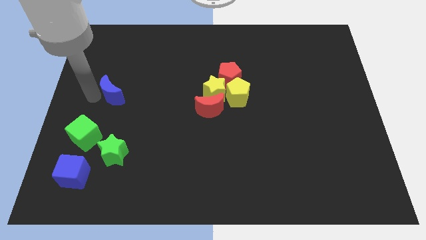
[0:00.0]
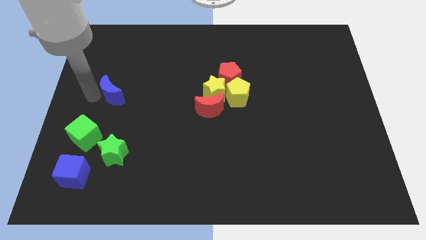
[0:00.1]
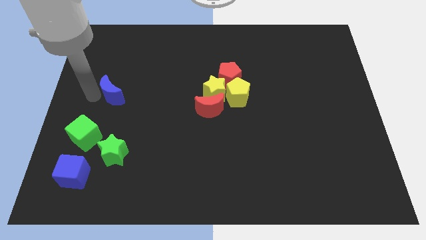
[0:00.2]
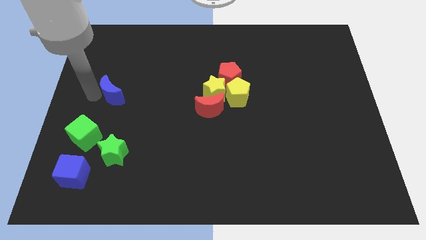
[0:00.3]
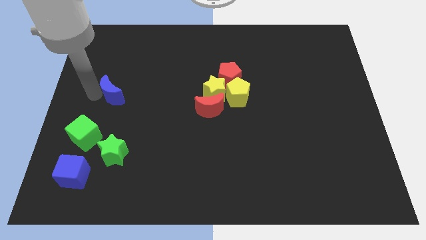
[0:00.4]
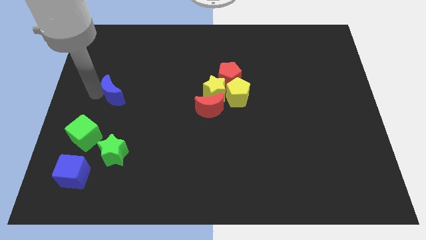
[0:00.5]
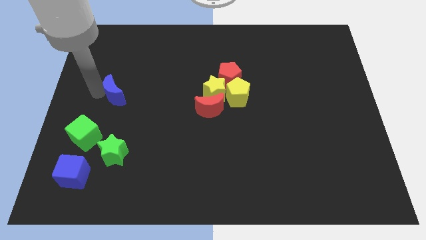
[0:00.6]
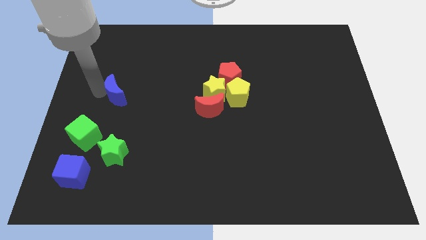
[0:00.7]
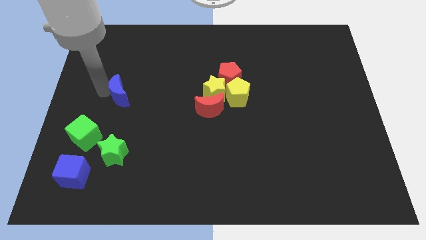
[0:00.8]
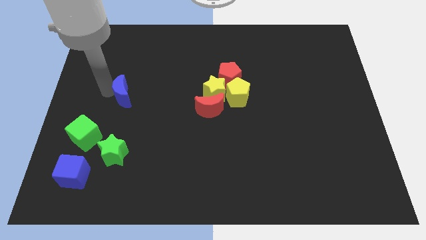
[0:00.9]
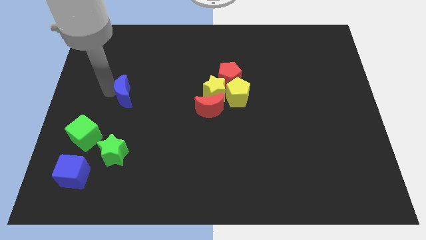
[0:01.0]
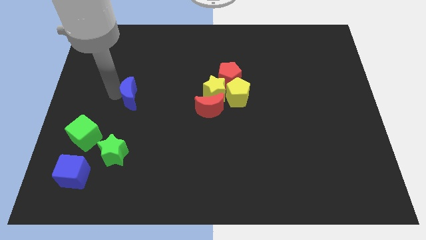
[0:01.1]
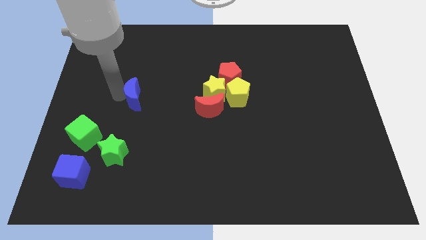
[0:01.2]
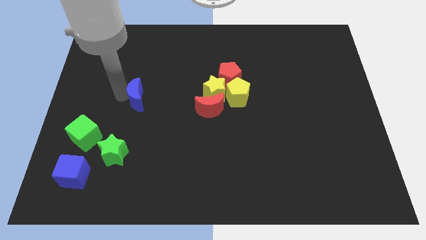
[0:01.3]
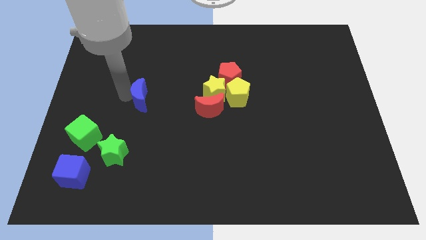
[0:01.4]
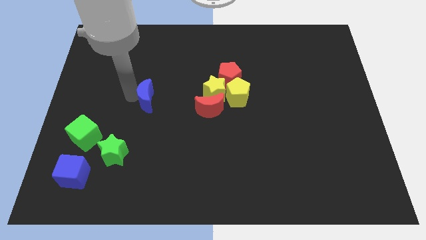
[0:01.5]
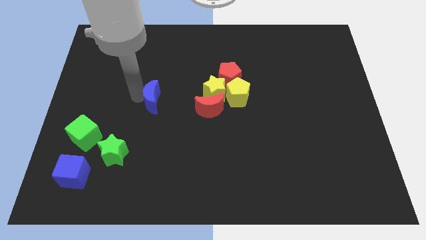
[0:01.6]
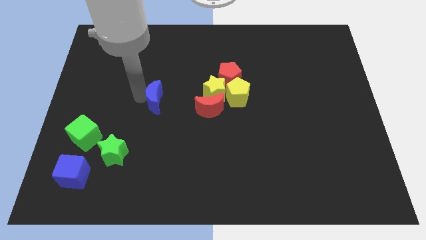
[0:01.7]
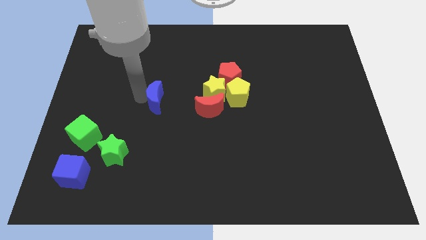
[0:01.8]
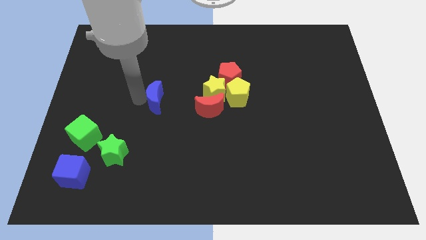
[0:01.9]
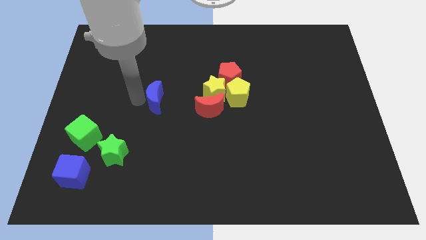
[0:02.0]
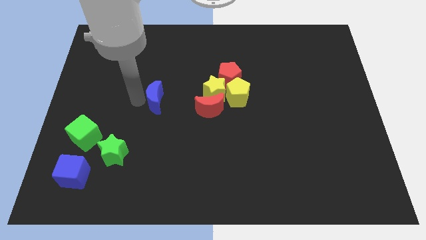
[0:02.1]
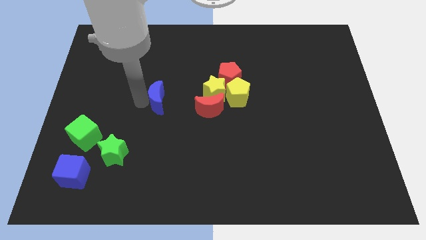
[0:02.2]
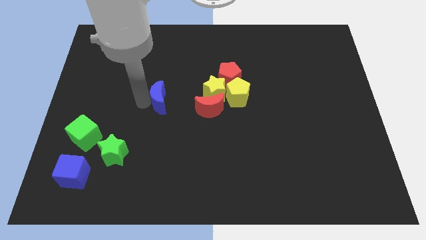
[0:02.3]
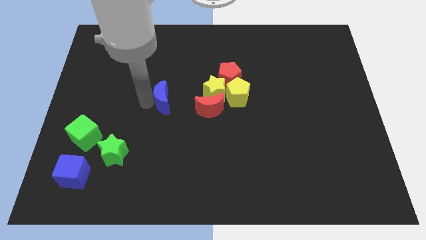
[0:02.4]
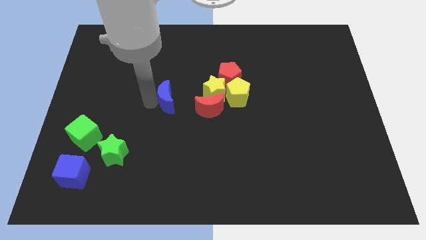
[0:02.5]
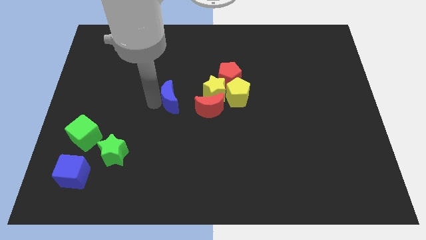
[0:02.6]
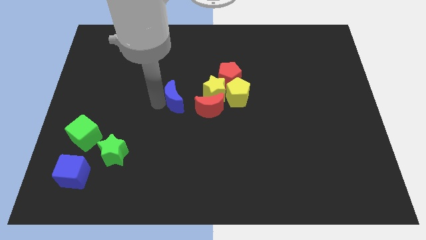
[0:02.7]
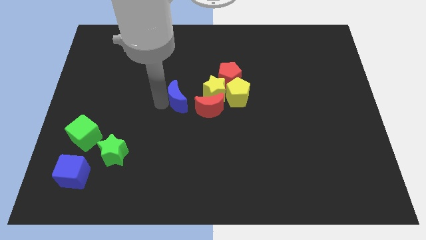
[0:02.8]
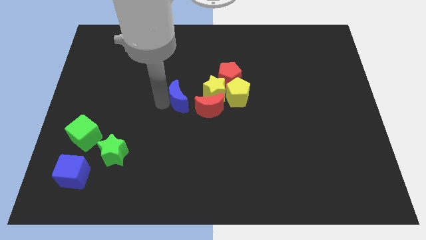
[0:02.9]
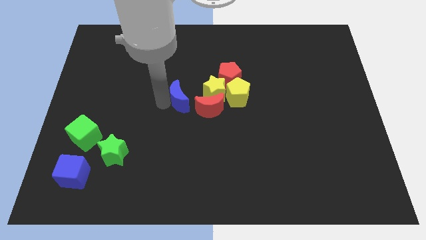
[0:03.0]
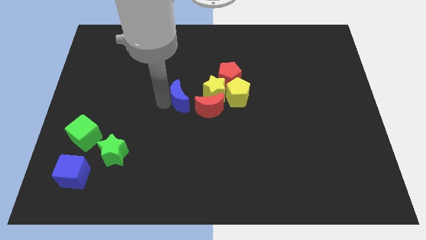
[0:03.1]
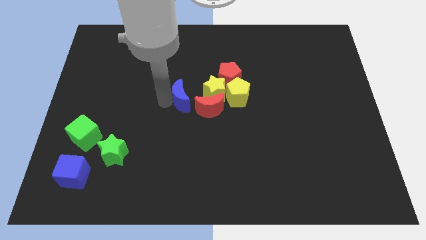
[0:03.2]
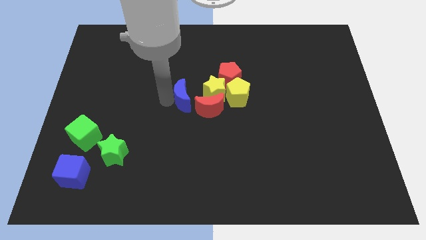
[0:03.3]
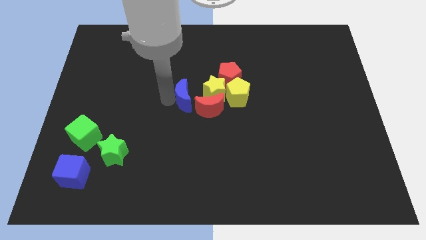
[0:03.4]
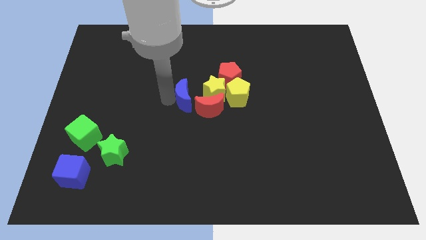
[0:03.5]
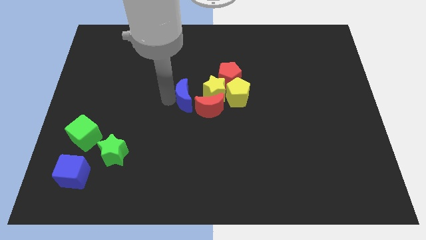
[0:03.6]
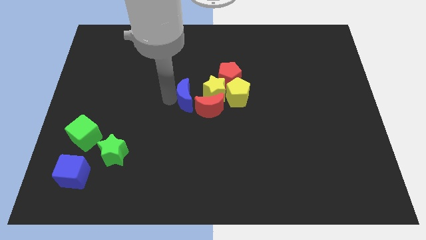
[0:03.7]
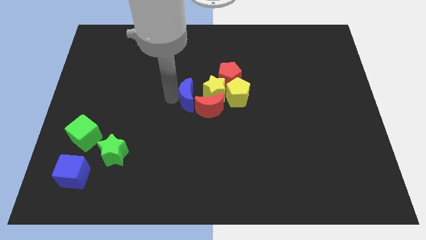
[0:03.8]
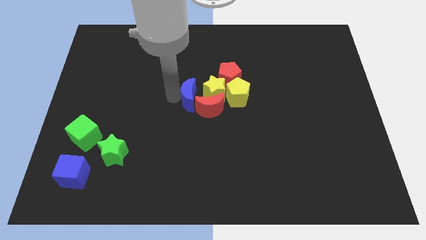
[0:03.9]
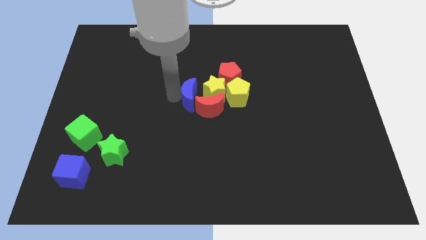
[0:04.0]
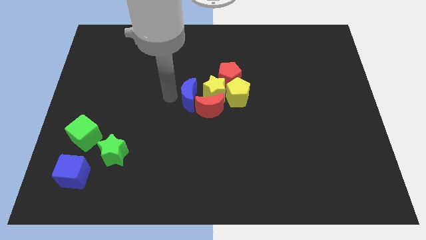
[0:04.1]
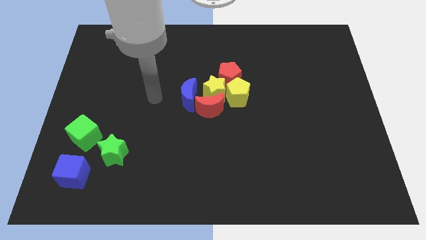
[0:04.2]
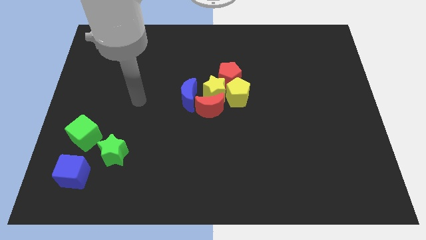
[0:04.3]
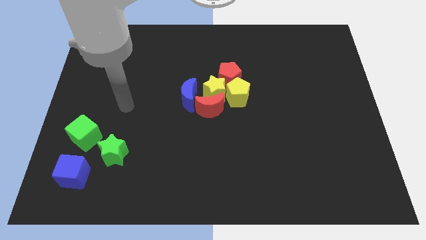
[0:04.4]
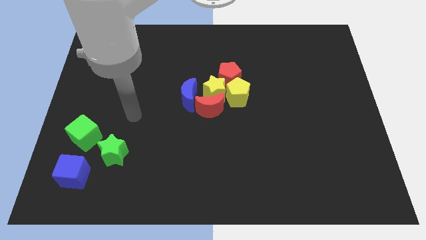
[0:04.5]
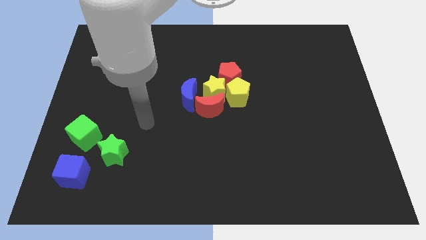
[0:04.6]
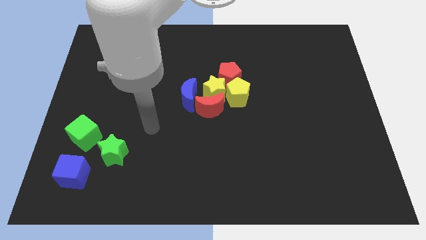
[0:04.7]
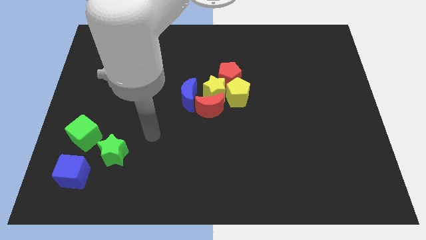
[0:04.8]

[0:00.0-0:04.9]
push blue crescent towards red crescent

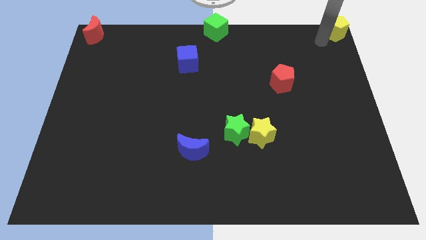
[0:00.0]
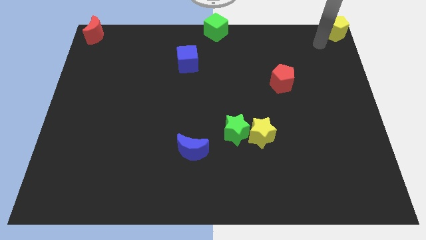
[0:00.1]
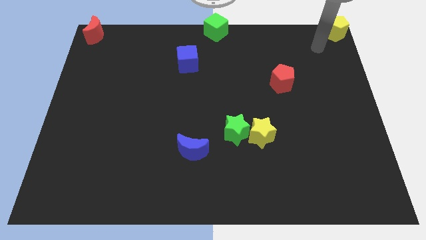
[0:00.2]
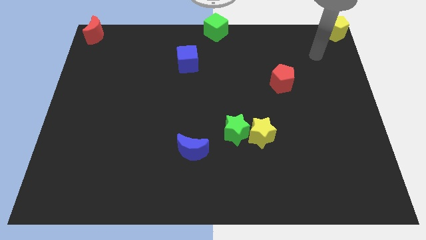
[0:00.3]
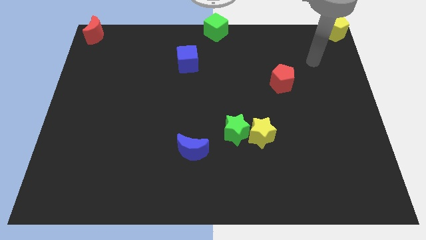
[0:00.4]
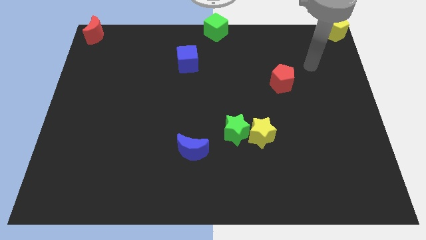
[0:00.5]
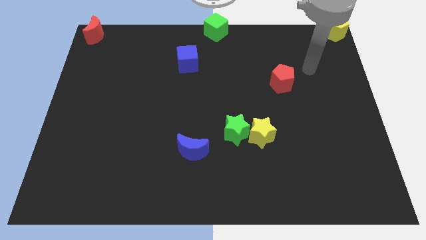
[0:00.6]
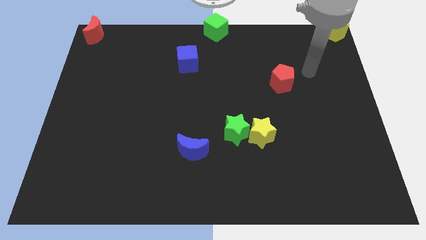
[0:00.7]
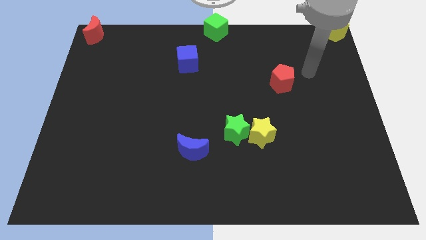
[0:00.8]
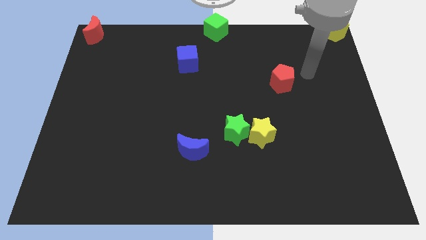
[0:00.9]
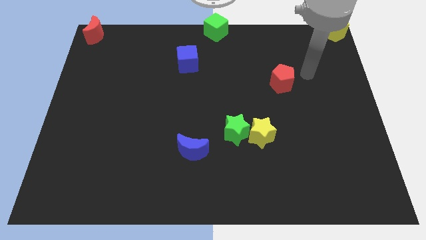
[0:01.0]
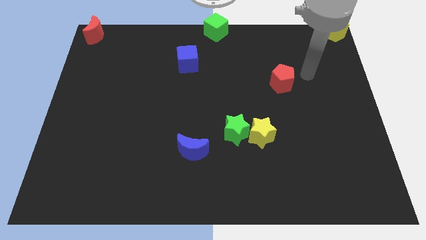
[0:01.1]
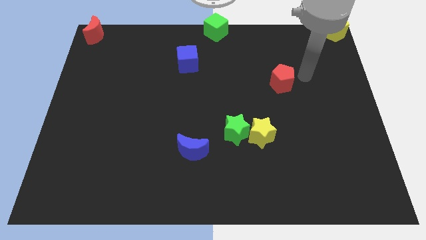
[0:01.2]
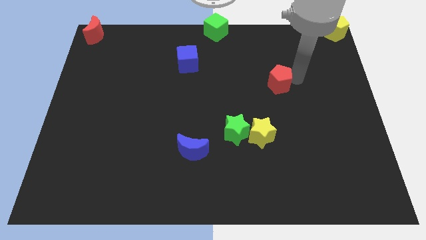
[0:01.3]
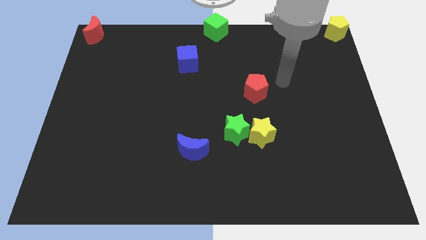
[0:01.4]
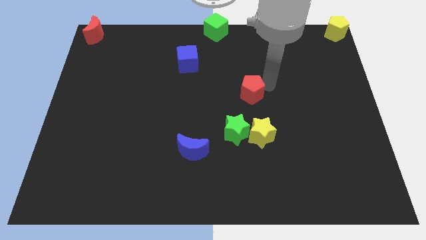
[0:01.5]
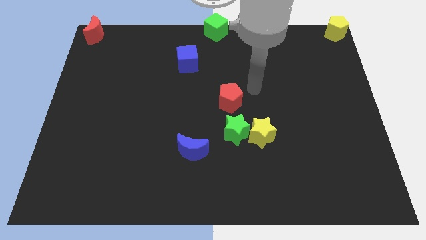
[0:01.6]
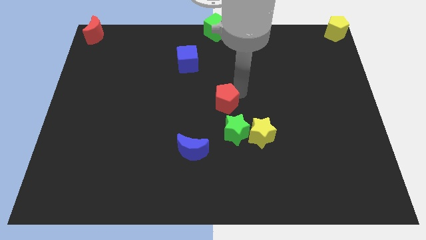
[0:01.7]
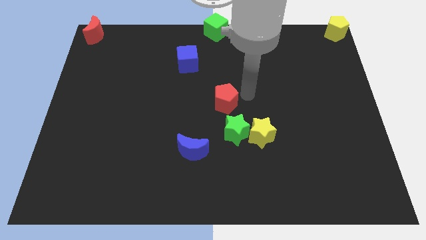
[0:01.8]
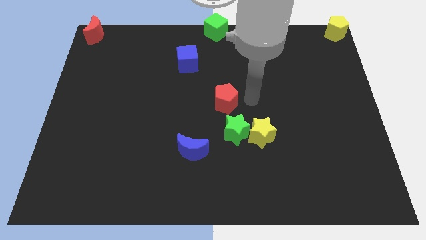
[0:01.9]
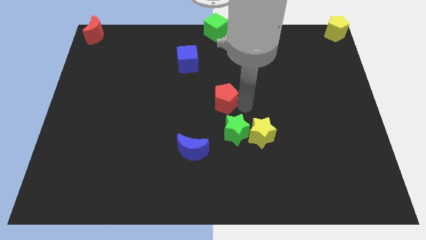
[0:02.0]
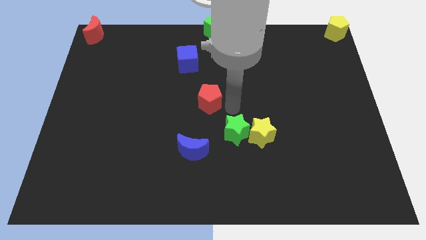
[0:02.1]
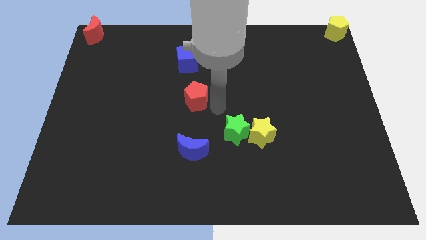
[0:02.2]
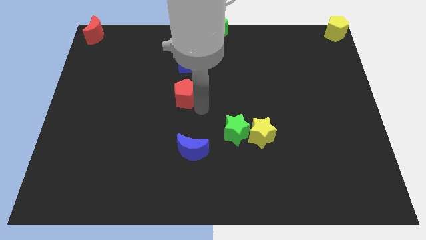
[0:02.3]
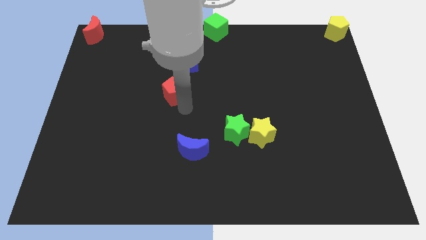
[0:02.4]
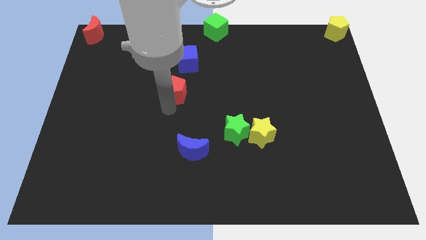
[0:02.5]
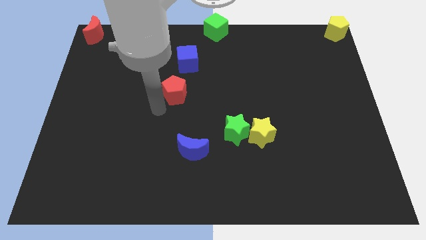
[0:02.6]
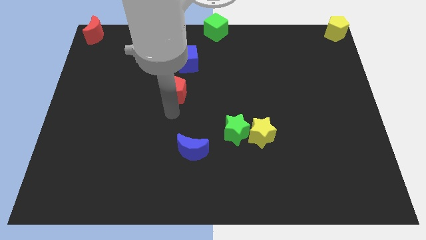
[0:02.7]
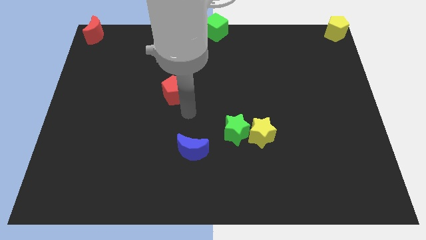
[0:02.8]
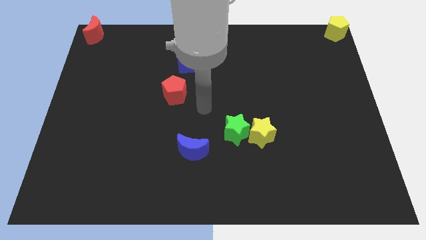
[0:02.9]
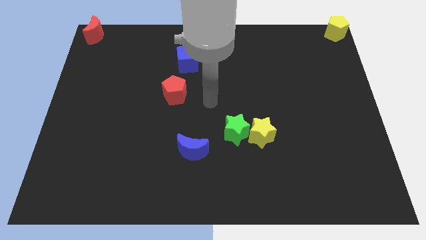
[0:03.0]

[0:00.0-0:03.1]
place the red pentagon to the bottom left of the blue cube

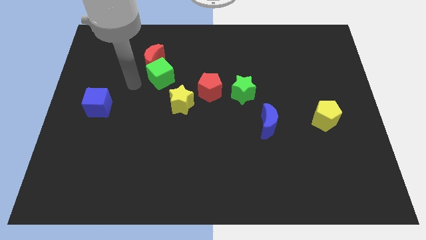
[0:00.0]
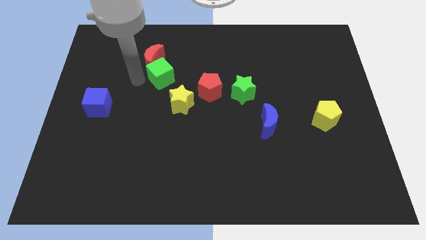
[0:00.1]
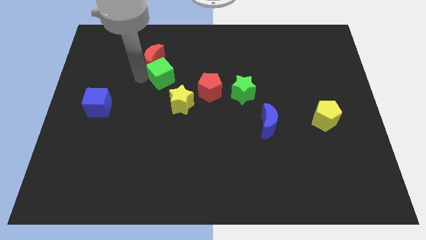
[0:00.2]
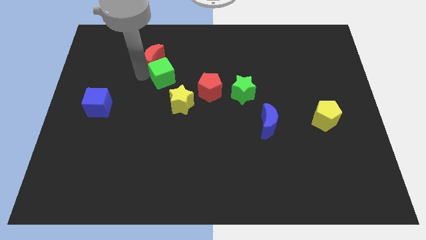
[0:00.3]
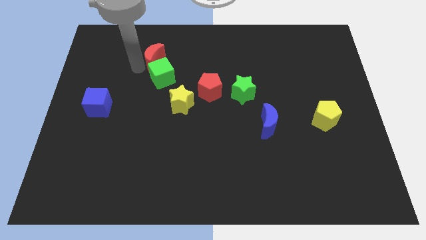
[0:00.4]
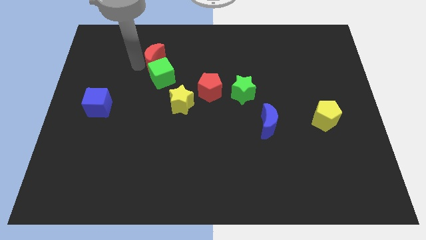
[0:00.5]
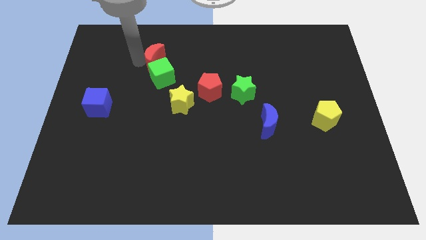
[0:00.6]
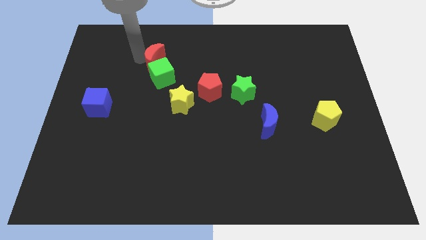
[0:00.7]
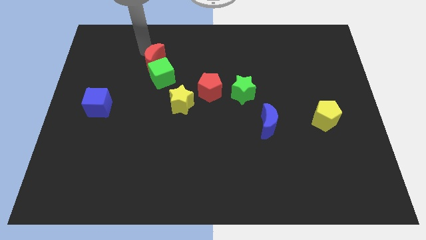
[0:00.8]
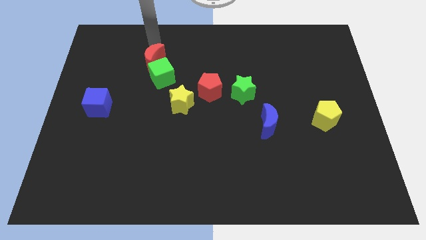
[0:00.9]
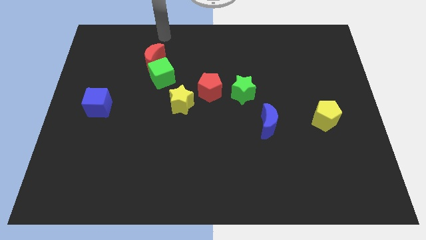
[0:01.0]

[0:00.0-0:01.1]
slightly touch the green cube and the red crescent
